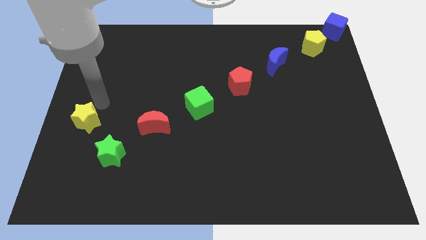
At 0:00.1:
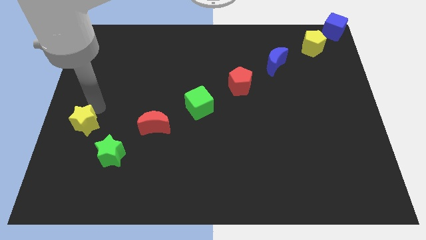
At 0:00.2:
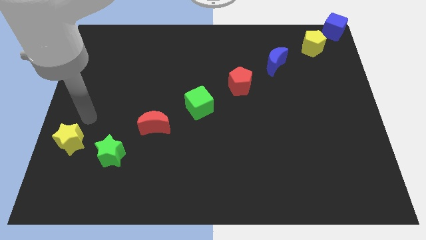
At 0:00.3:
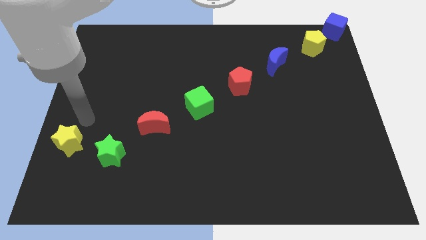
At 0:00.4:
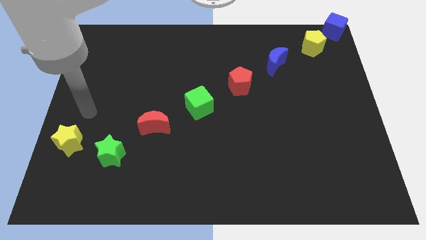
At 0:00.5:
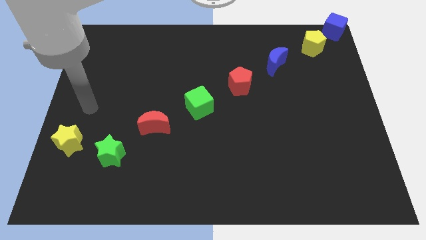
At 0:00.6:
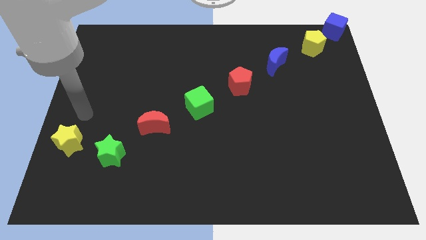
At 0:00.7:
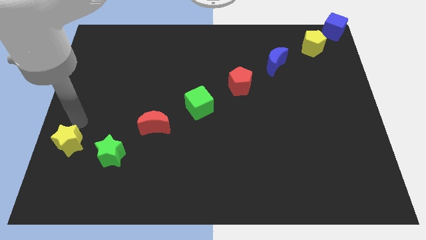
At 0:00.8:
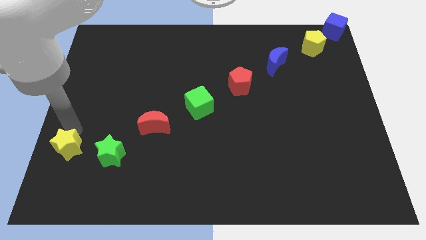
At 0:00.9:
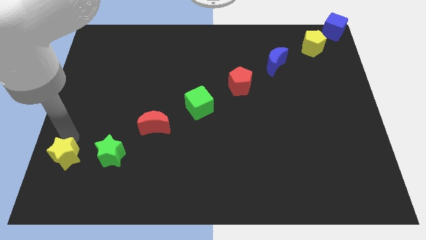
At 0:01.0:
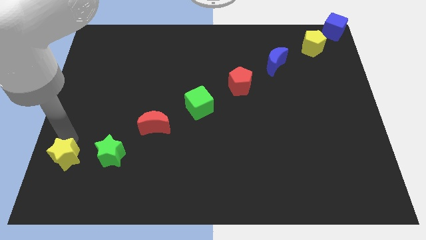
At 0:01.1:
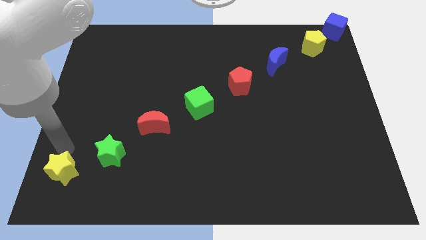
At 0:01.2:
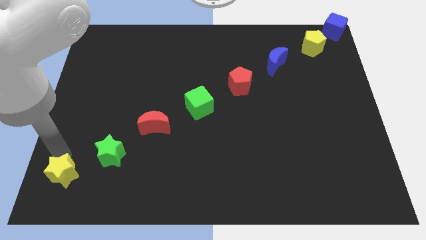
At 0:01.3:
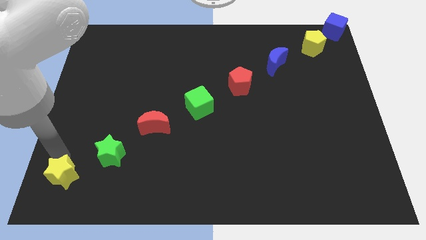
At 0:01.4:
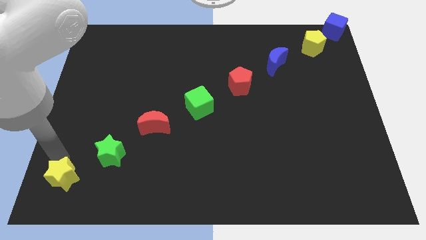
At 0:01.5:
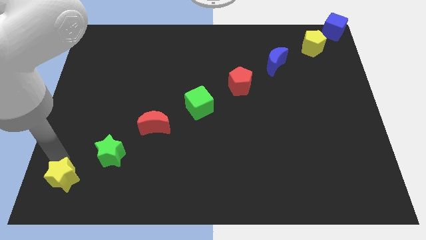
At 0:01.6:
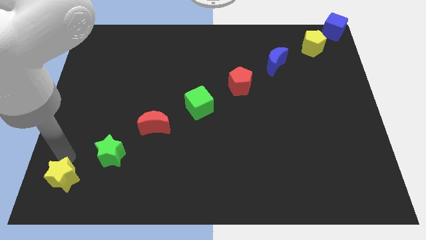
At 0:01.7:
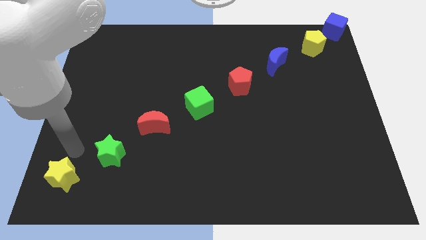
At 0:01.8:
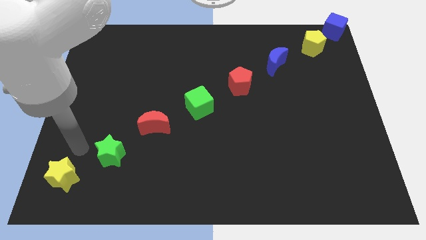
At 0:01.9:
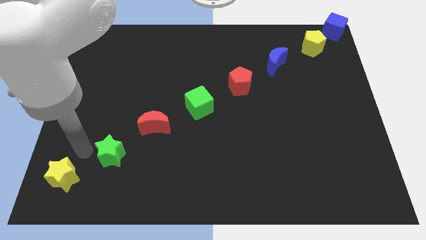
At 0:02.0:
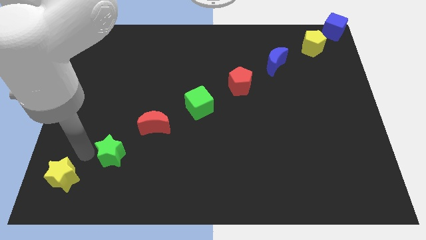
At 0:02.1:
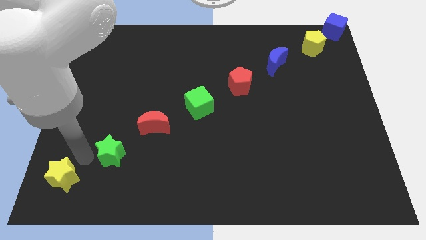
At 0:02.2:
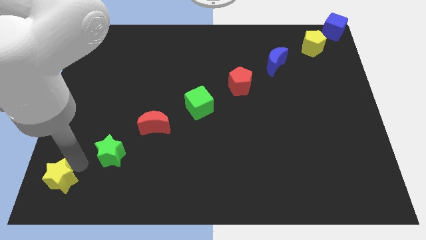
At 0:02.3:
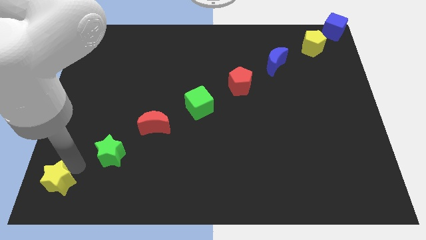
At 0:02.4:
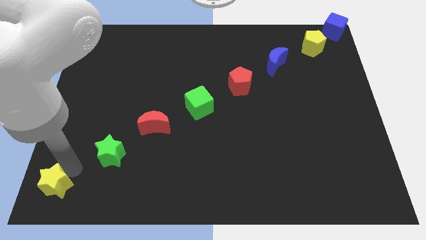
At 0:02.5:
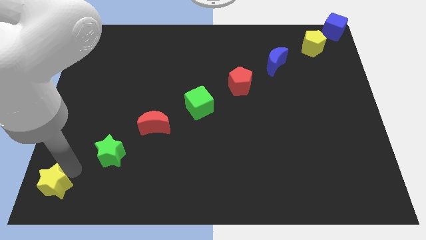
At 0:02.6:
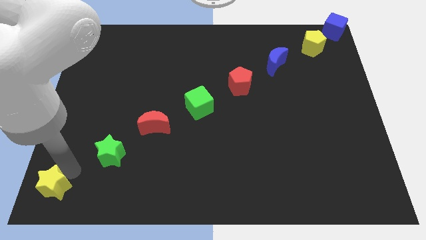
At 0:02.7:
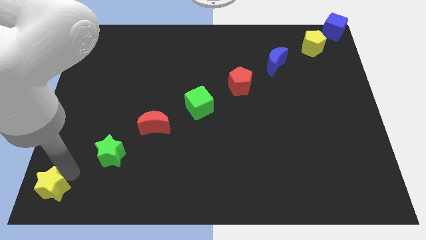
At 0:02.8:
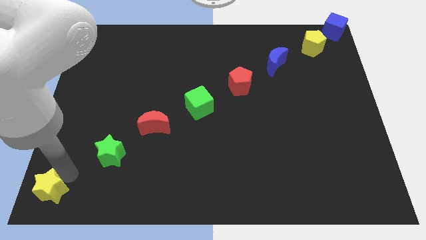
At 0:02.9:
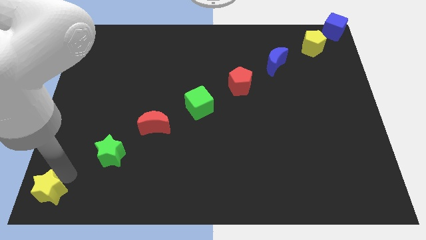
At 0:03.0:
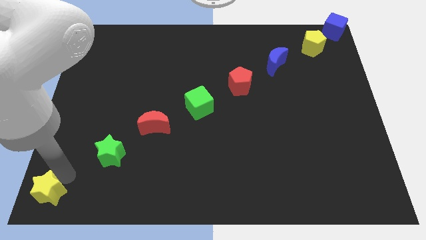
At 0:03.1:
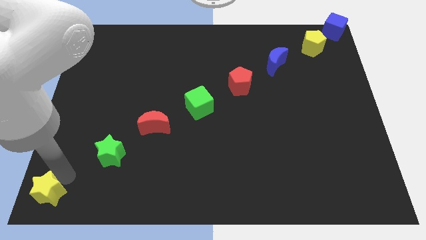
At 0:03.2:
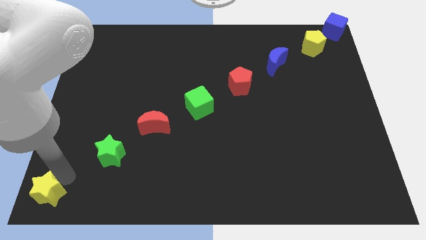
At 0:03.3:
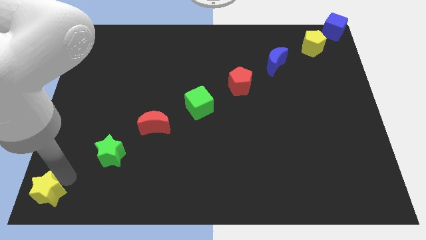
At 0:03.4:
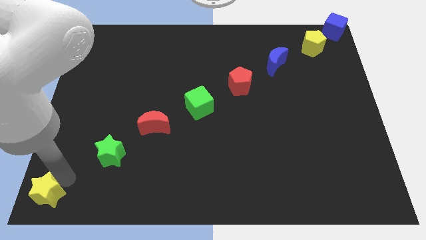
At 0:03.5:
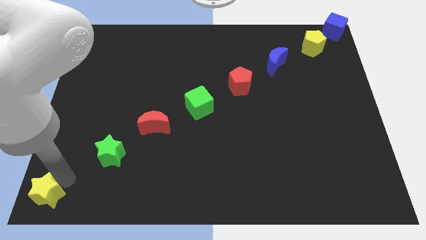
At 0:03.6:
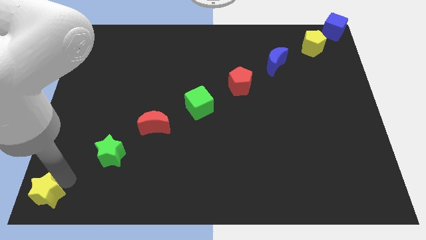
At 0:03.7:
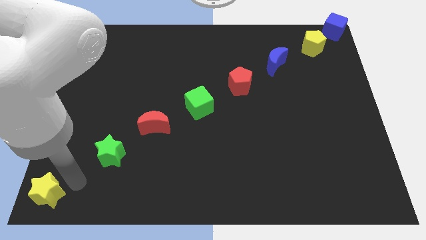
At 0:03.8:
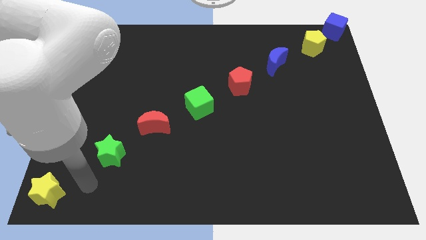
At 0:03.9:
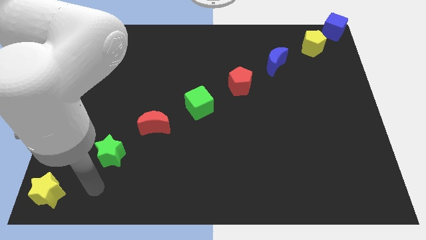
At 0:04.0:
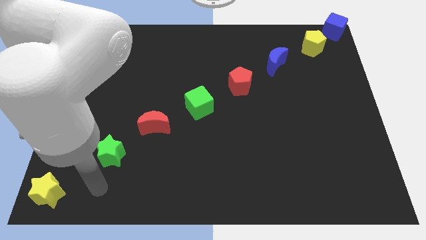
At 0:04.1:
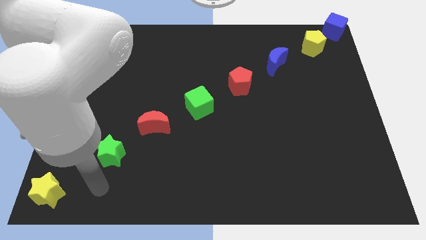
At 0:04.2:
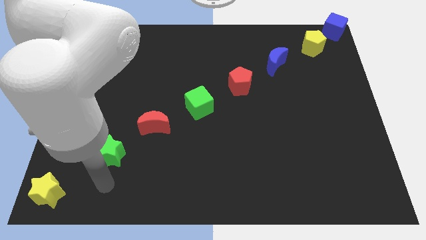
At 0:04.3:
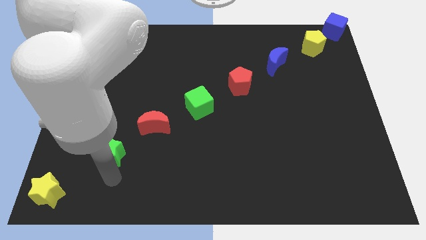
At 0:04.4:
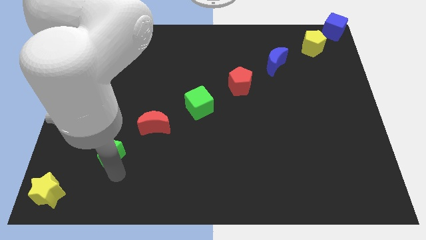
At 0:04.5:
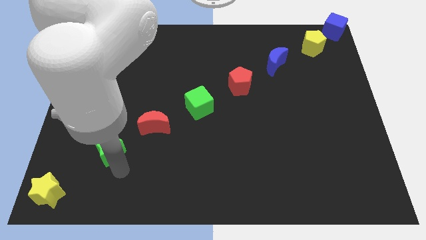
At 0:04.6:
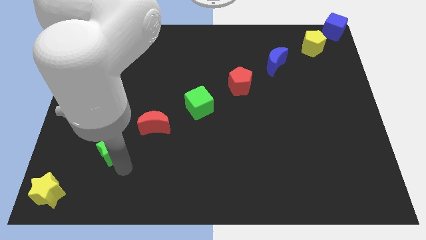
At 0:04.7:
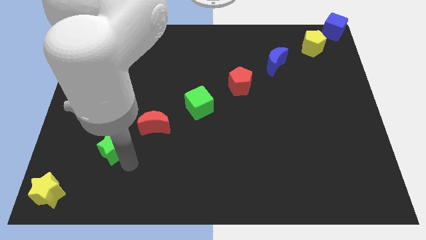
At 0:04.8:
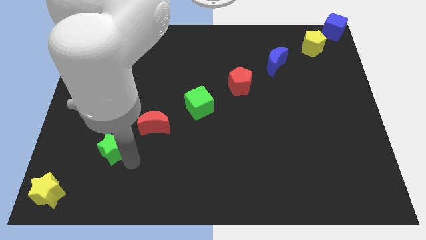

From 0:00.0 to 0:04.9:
move the yellow star diagonally to green star to form a line

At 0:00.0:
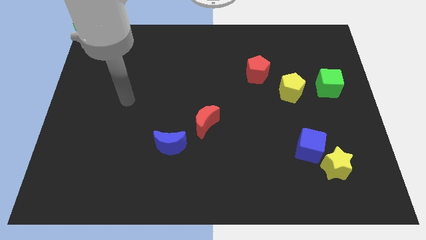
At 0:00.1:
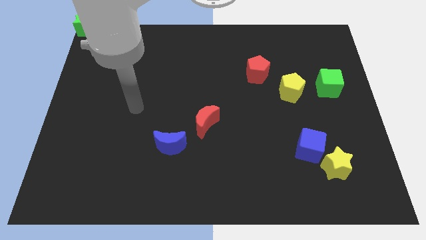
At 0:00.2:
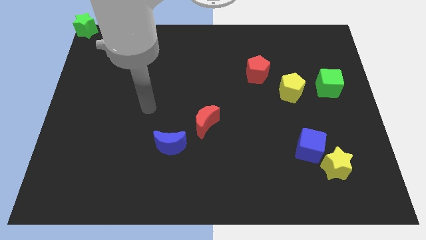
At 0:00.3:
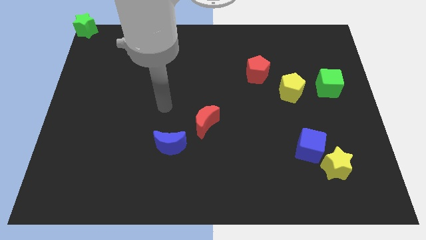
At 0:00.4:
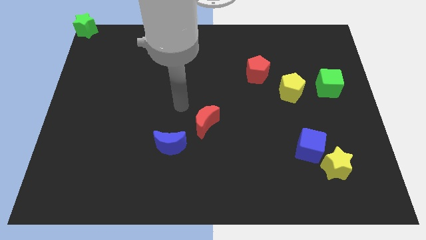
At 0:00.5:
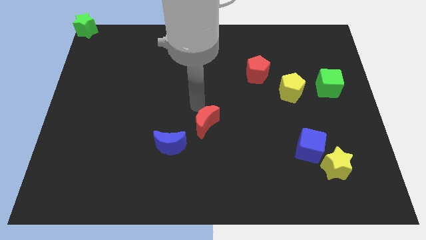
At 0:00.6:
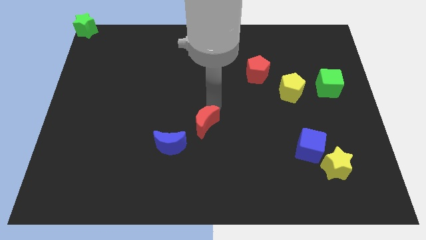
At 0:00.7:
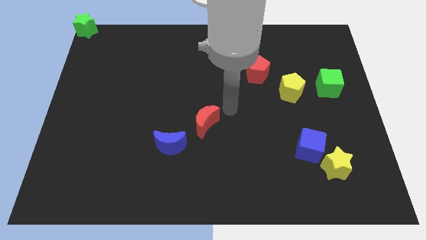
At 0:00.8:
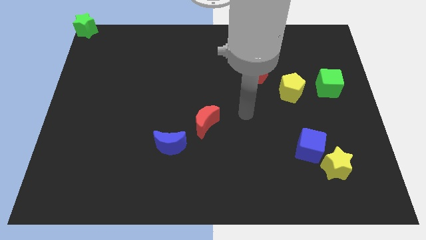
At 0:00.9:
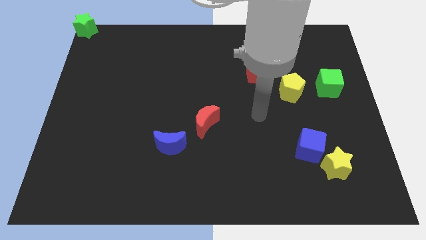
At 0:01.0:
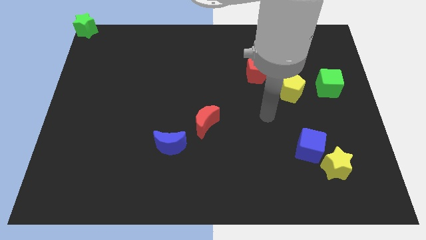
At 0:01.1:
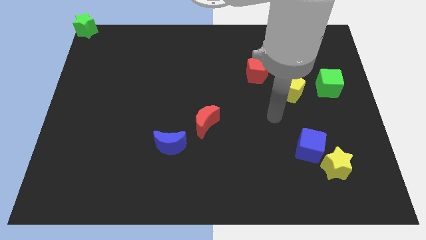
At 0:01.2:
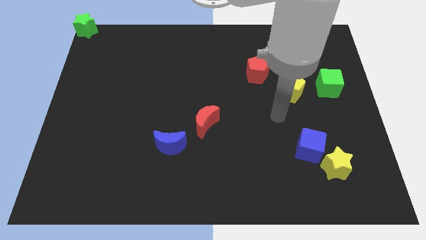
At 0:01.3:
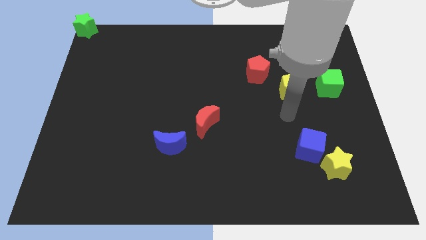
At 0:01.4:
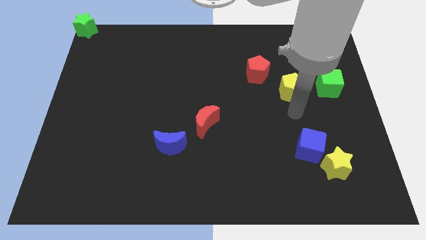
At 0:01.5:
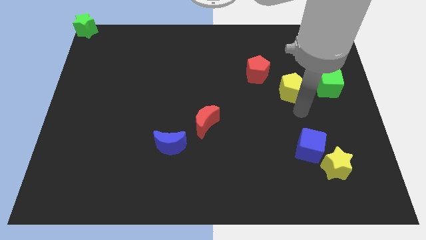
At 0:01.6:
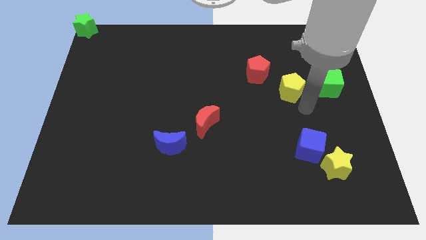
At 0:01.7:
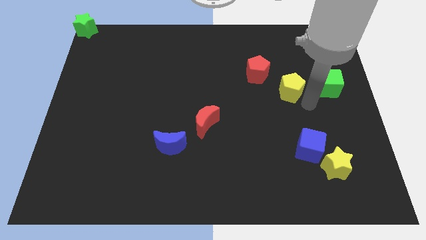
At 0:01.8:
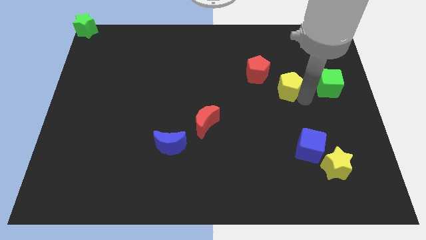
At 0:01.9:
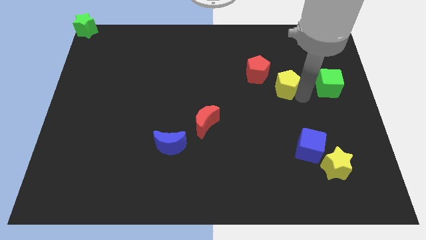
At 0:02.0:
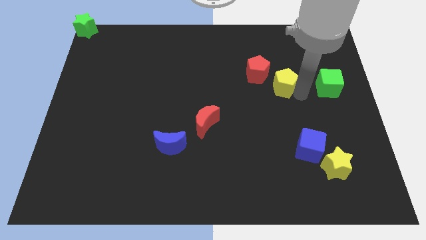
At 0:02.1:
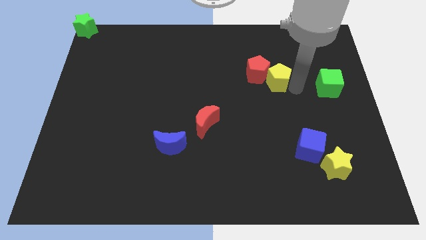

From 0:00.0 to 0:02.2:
move yellow pentagon slightly towards red pentagon

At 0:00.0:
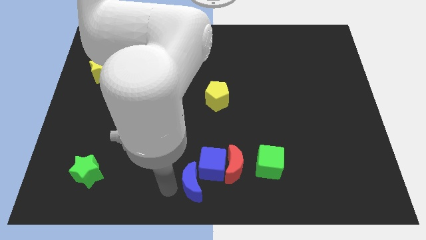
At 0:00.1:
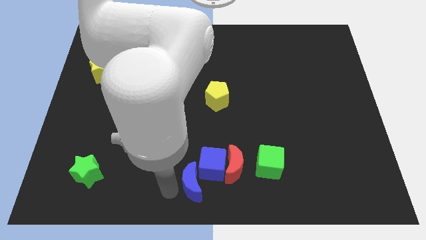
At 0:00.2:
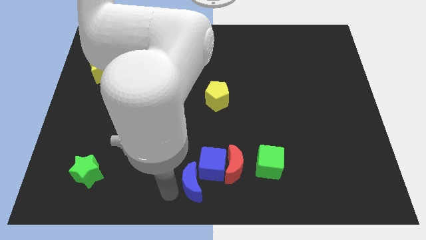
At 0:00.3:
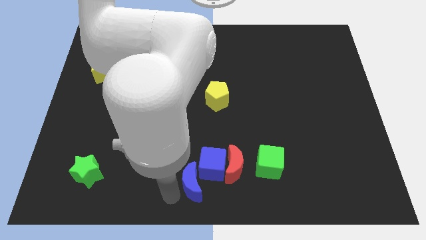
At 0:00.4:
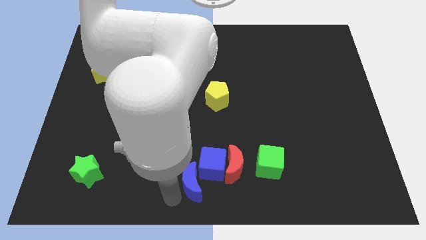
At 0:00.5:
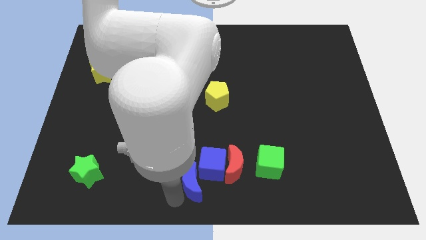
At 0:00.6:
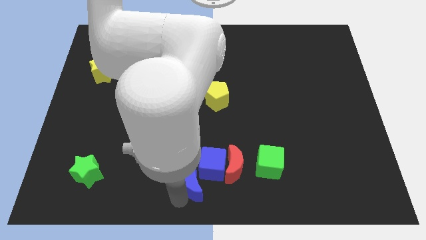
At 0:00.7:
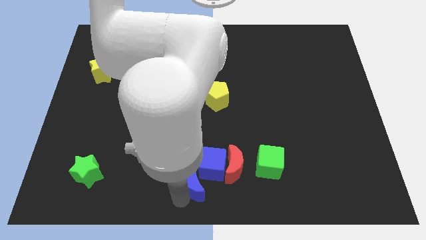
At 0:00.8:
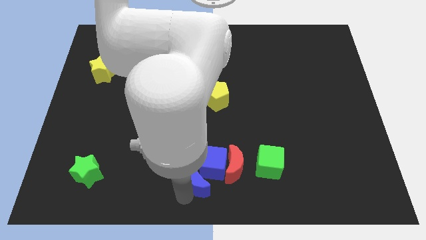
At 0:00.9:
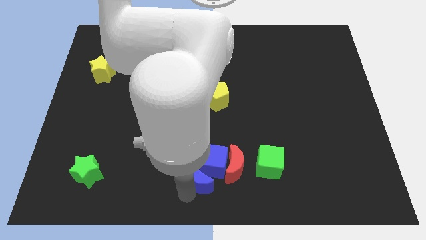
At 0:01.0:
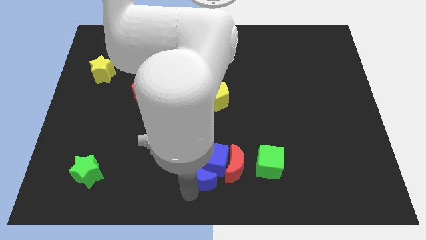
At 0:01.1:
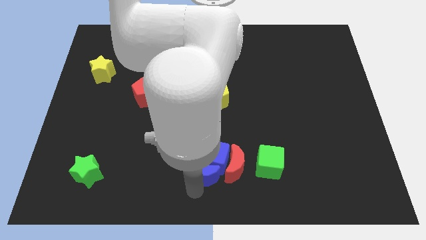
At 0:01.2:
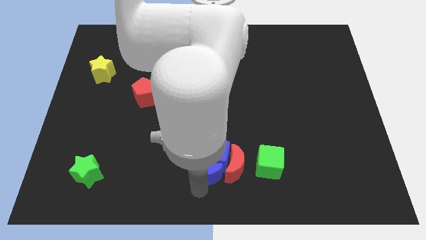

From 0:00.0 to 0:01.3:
push the blue moon into the blue cube

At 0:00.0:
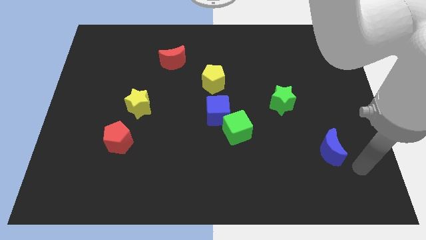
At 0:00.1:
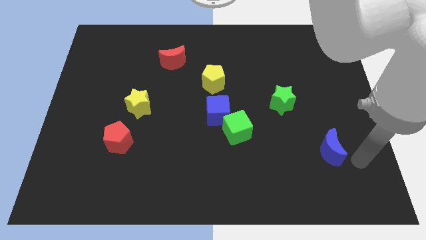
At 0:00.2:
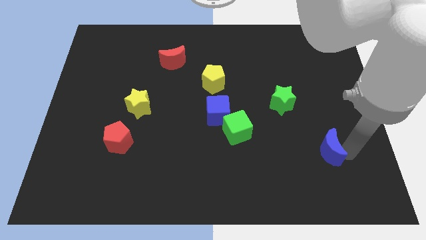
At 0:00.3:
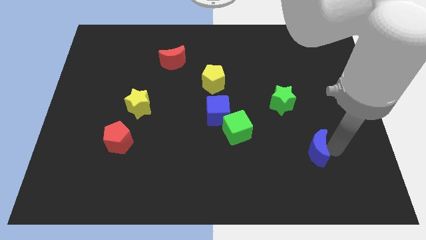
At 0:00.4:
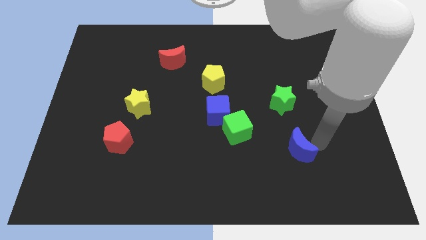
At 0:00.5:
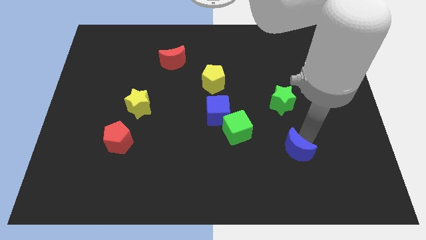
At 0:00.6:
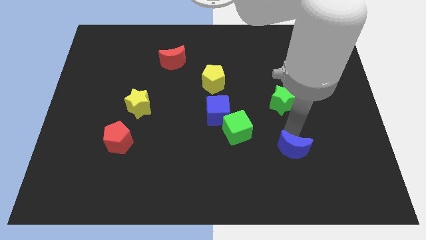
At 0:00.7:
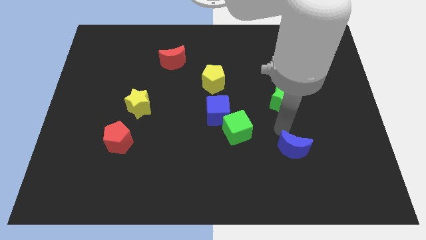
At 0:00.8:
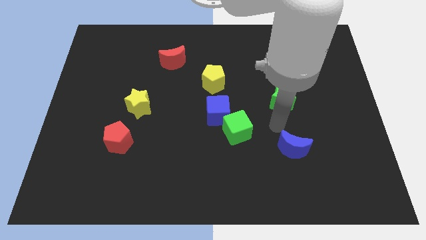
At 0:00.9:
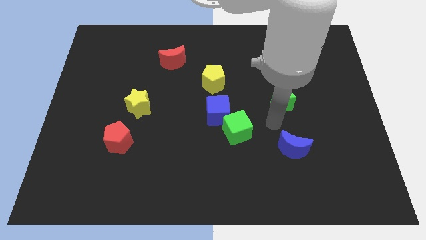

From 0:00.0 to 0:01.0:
move blue moon to the center
